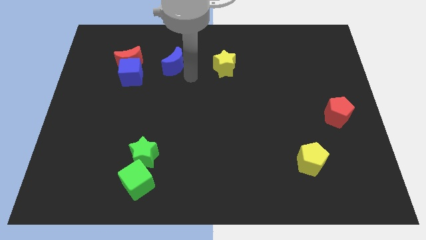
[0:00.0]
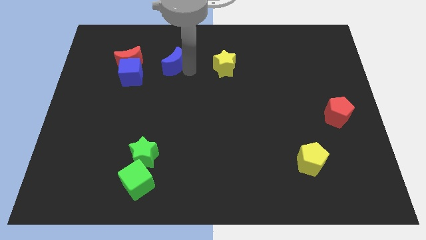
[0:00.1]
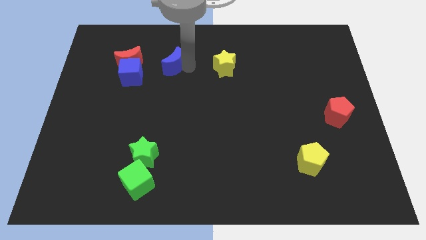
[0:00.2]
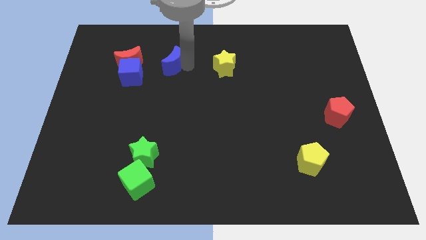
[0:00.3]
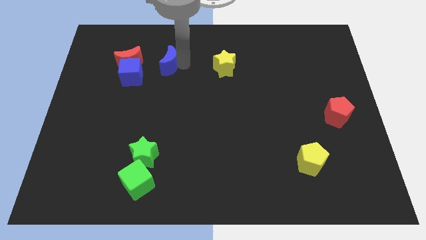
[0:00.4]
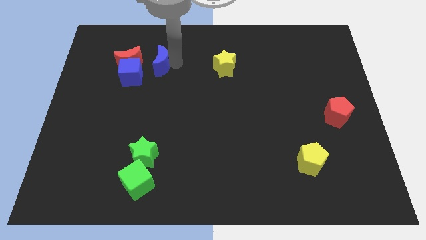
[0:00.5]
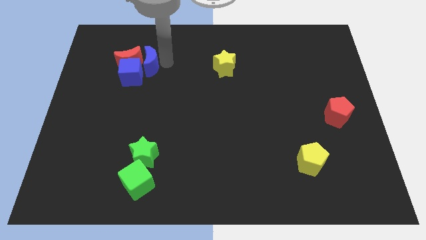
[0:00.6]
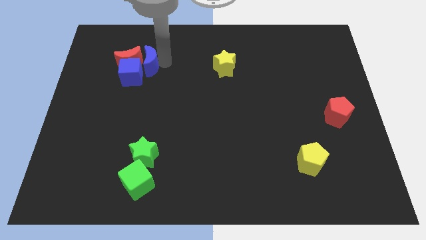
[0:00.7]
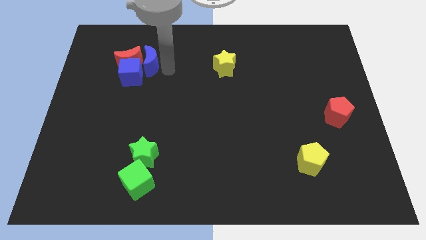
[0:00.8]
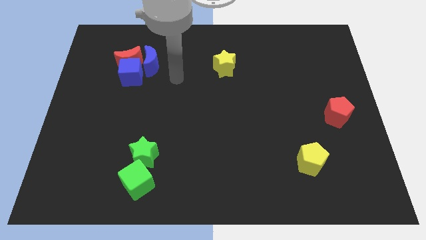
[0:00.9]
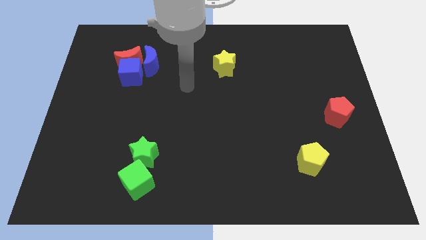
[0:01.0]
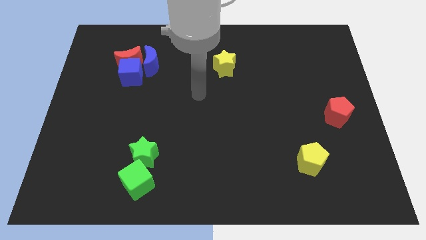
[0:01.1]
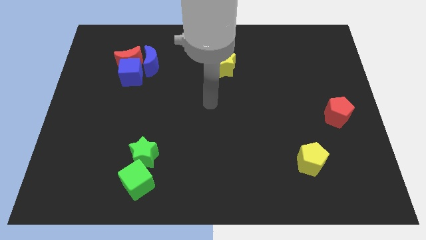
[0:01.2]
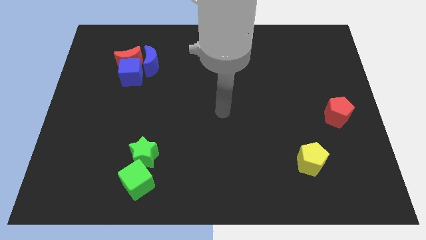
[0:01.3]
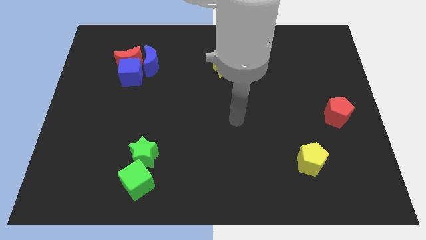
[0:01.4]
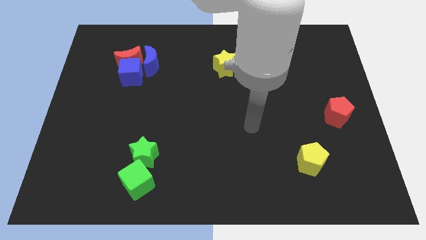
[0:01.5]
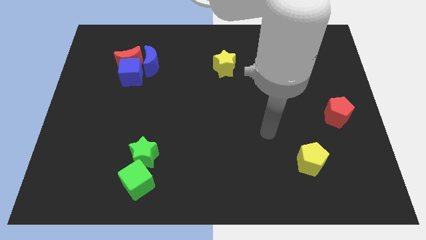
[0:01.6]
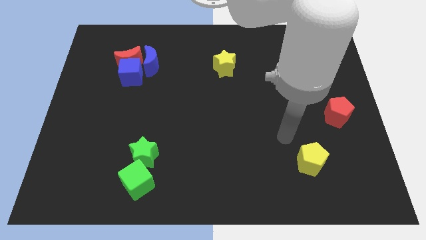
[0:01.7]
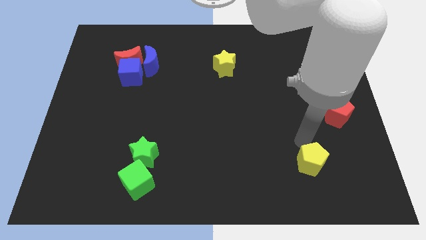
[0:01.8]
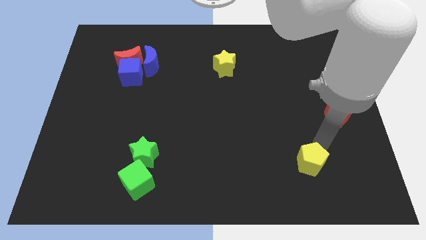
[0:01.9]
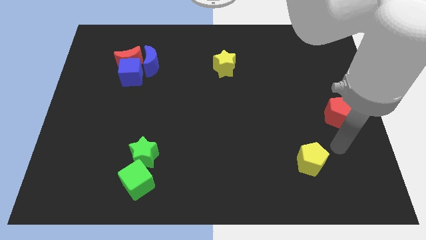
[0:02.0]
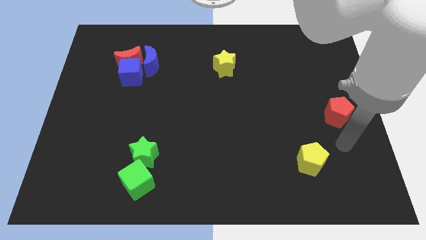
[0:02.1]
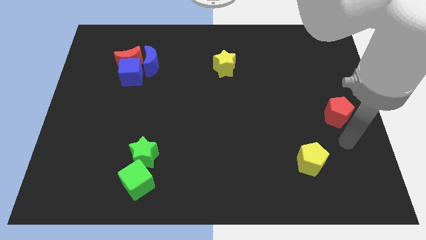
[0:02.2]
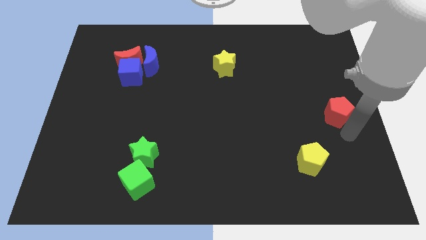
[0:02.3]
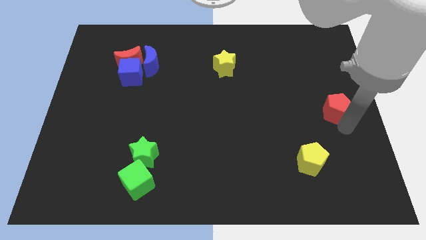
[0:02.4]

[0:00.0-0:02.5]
go near the red pentagon

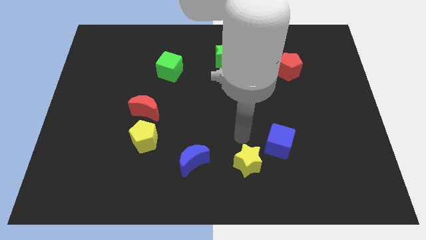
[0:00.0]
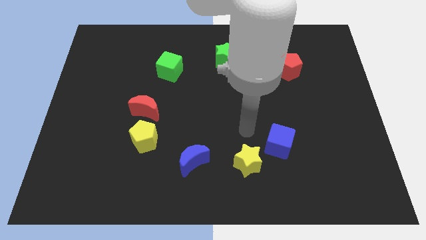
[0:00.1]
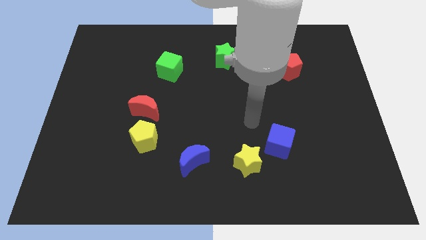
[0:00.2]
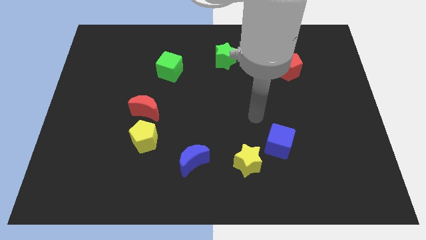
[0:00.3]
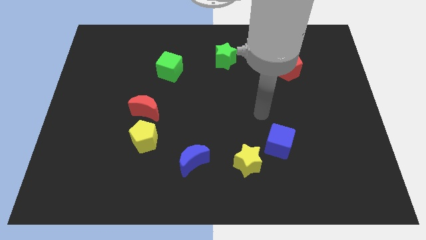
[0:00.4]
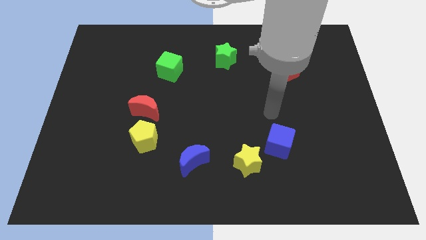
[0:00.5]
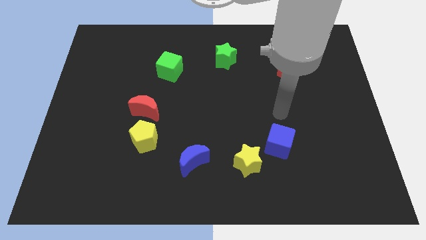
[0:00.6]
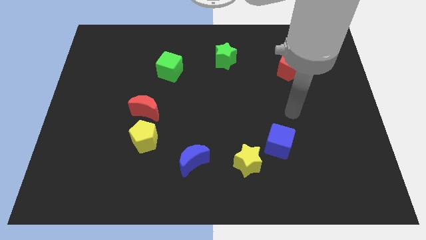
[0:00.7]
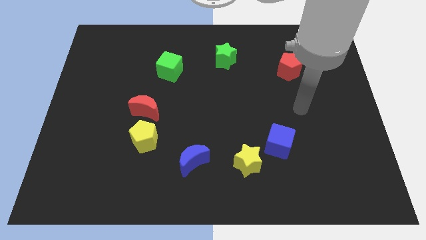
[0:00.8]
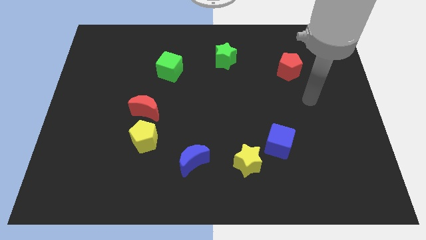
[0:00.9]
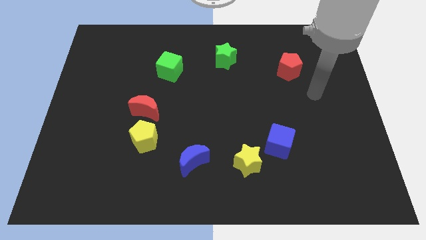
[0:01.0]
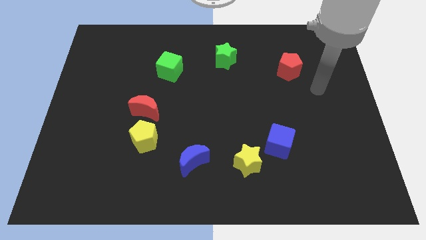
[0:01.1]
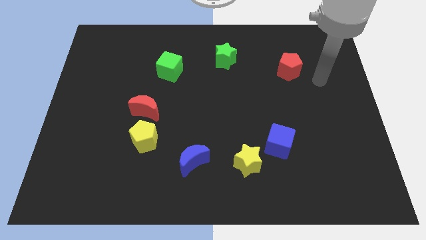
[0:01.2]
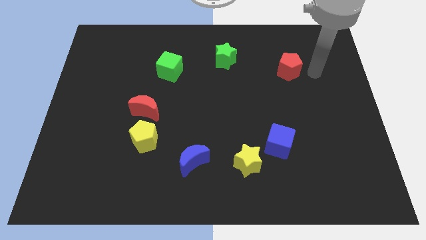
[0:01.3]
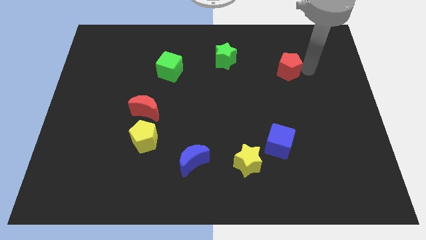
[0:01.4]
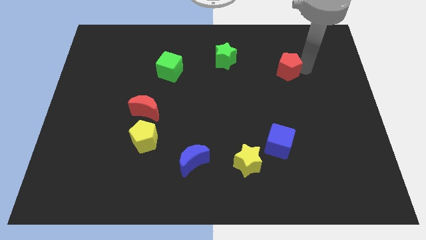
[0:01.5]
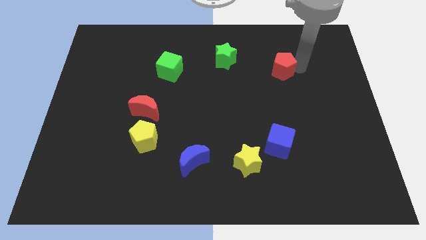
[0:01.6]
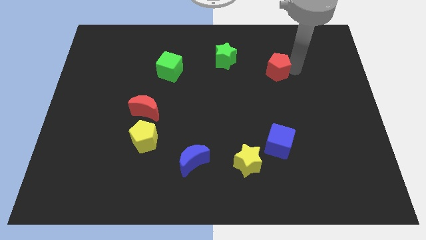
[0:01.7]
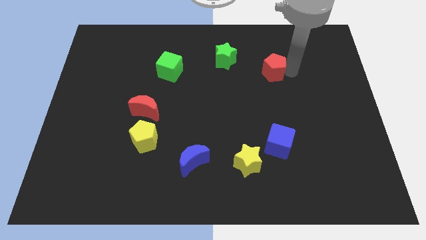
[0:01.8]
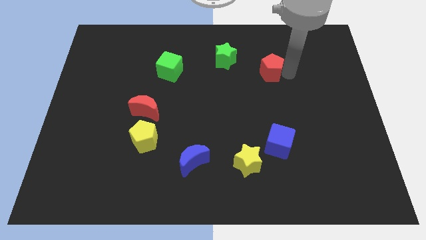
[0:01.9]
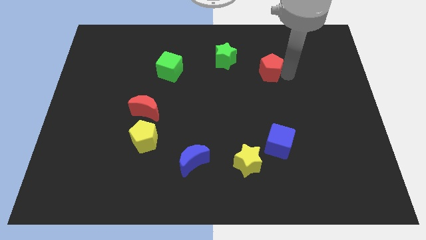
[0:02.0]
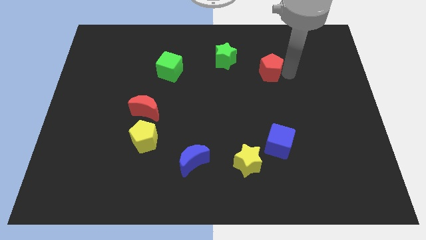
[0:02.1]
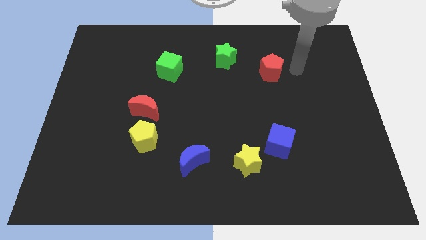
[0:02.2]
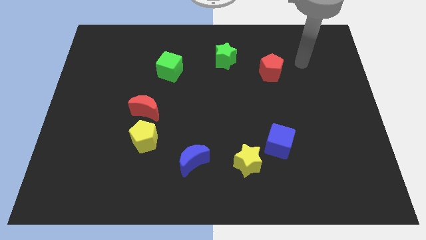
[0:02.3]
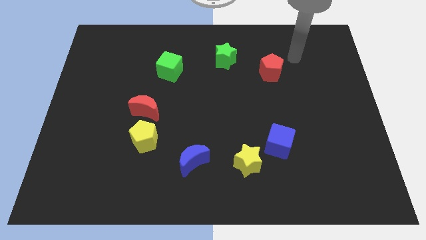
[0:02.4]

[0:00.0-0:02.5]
move the red pentagon slightly towards the left side

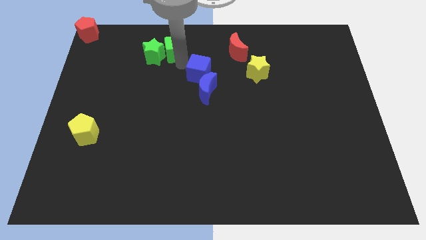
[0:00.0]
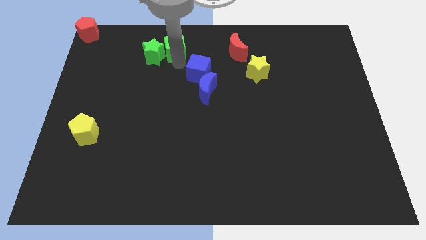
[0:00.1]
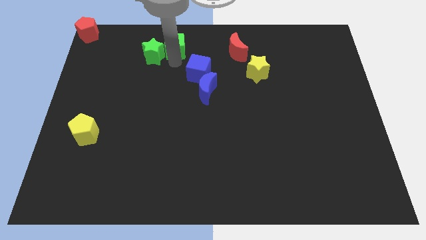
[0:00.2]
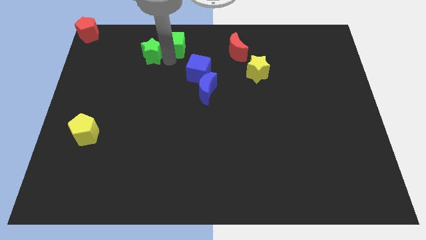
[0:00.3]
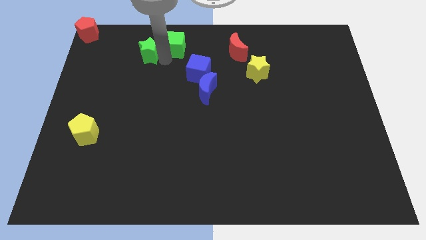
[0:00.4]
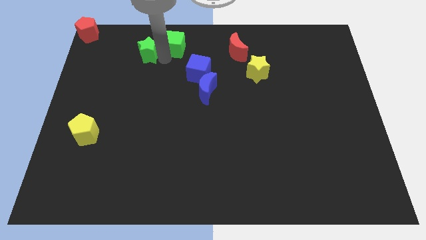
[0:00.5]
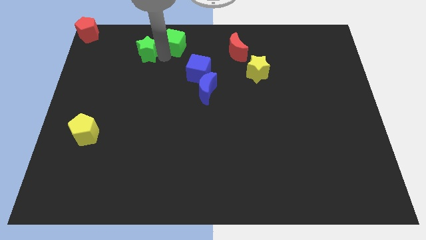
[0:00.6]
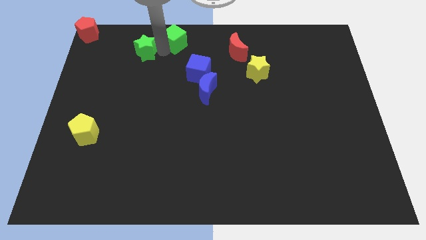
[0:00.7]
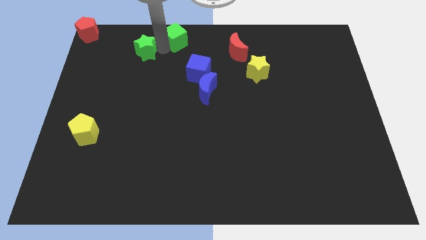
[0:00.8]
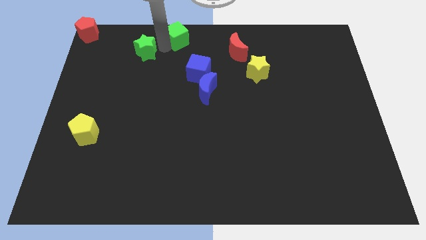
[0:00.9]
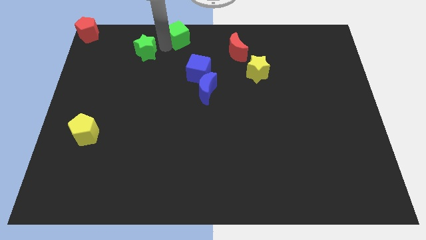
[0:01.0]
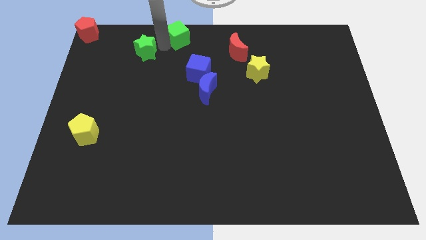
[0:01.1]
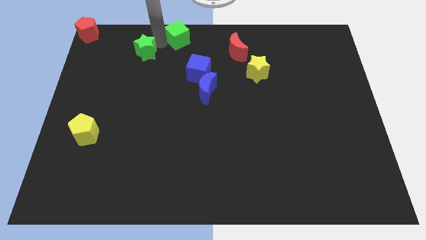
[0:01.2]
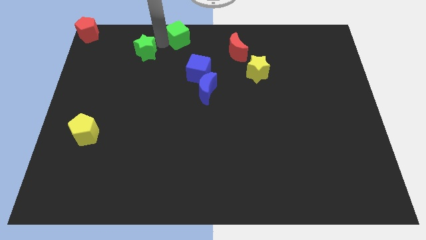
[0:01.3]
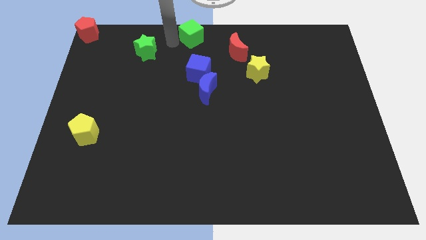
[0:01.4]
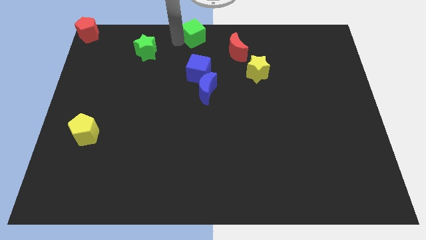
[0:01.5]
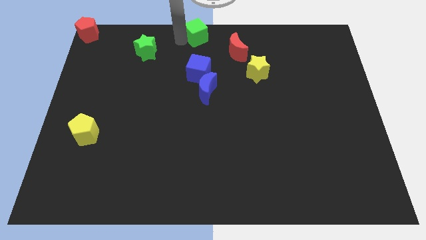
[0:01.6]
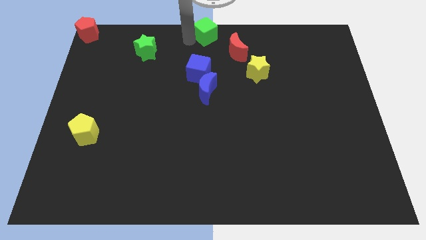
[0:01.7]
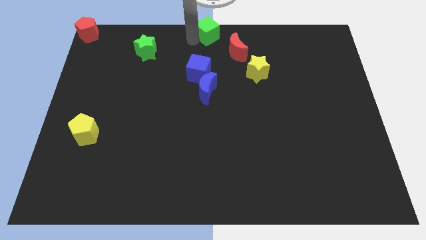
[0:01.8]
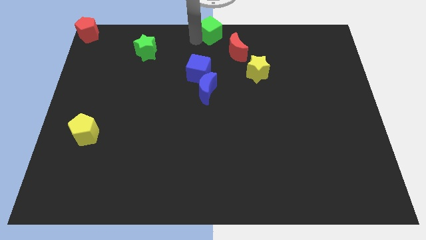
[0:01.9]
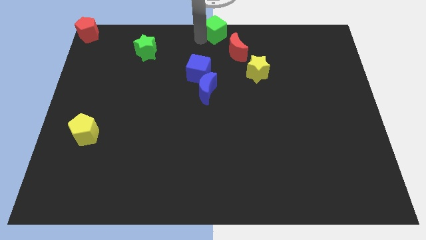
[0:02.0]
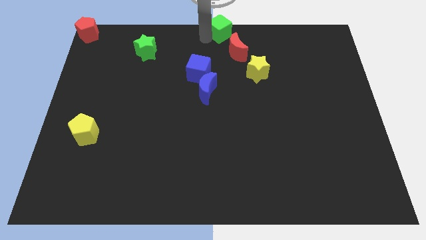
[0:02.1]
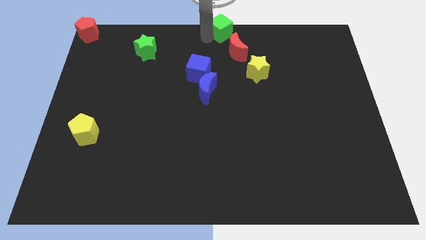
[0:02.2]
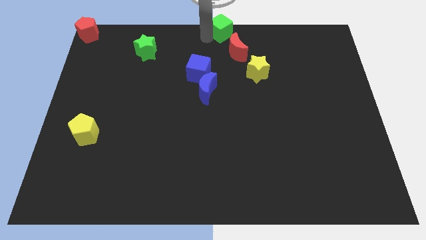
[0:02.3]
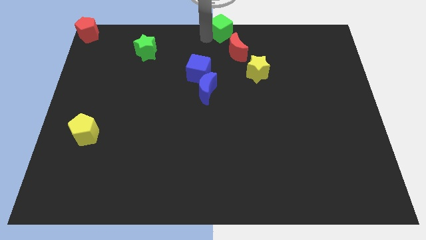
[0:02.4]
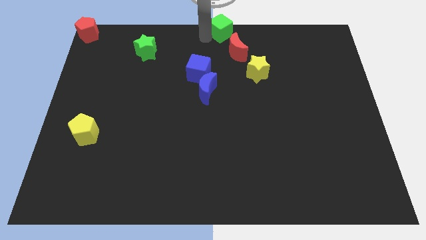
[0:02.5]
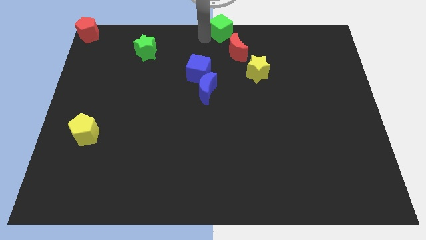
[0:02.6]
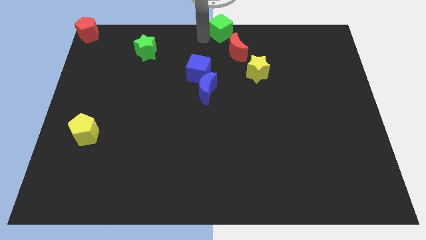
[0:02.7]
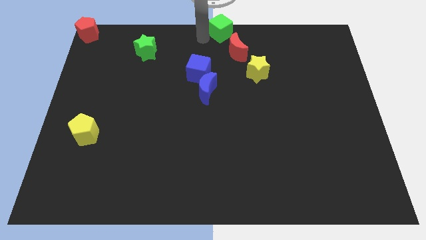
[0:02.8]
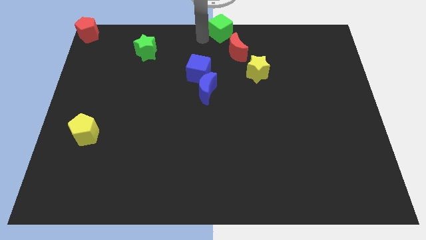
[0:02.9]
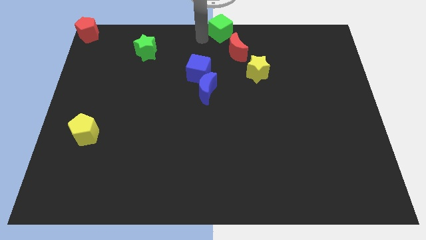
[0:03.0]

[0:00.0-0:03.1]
separate green cube from green star

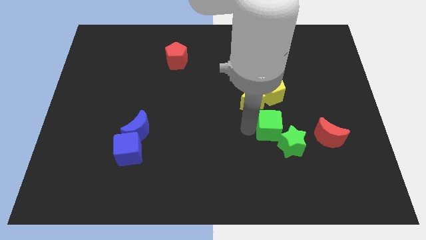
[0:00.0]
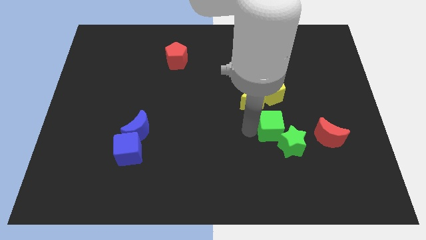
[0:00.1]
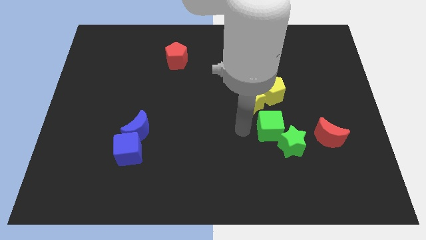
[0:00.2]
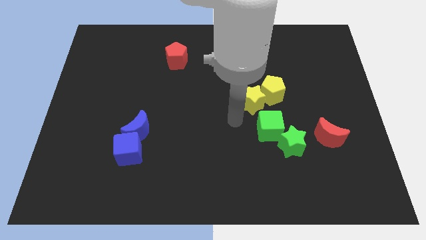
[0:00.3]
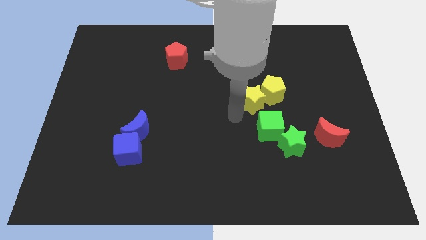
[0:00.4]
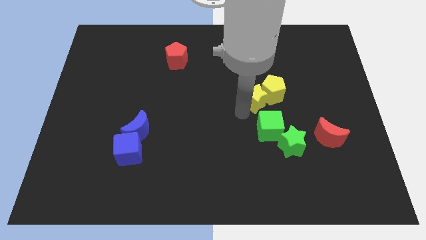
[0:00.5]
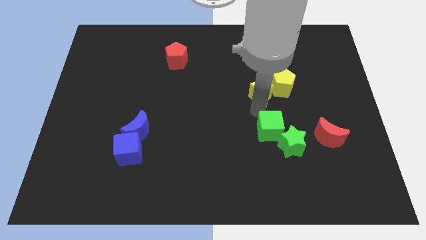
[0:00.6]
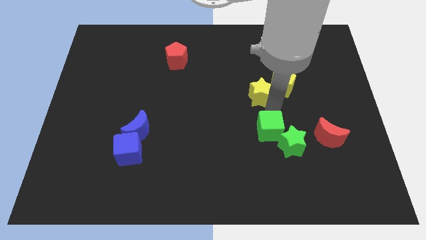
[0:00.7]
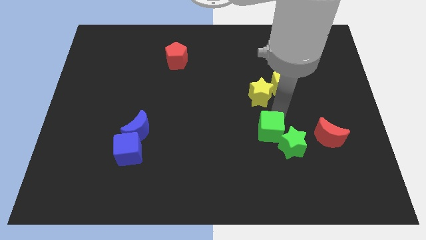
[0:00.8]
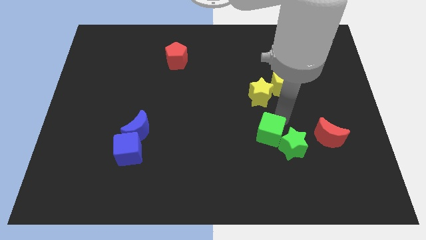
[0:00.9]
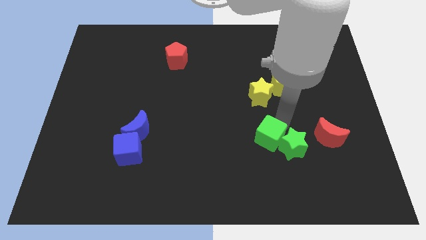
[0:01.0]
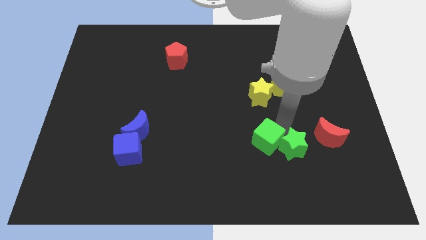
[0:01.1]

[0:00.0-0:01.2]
separate the yellow blocks from green blocks
